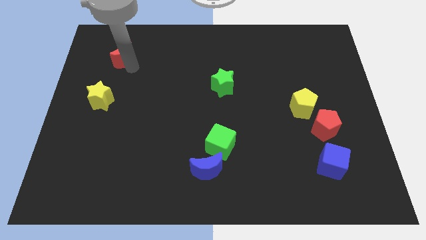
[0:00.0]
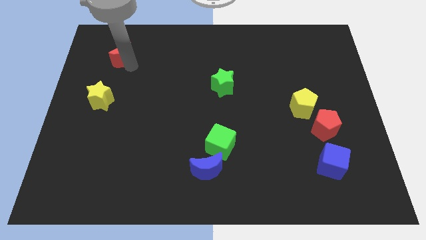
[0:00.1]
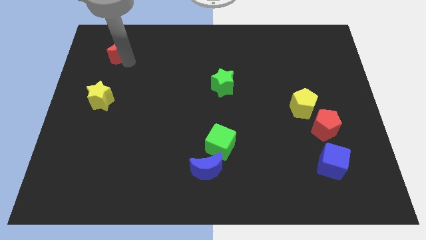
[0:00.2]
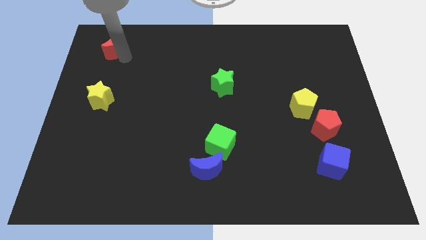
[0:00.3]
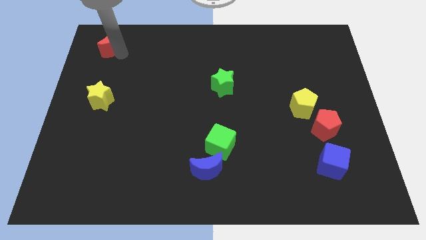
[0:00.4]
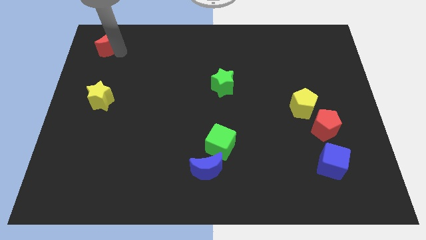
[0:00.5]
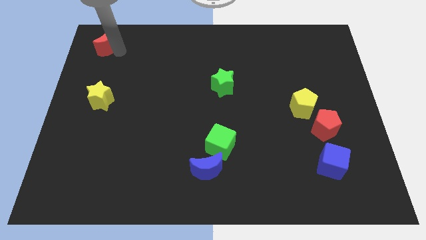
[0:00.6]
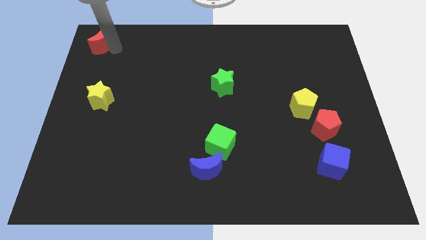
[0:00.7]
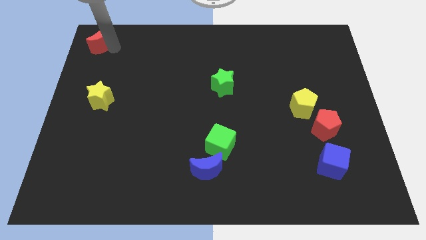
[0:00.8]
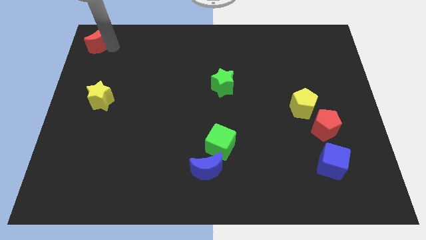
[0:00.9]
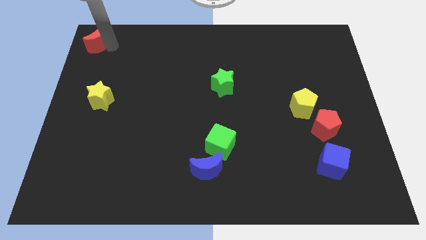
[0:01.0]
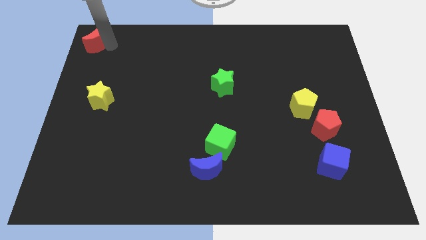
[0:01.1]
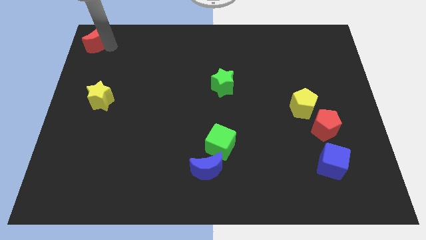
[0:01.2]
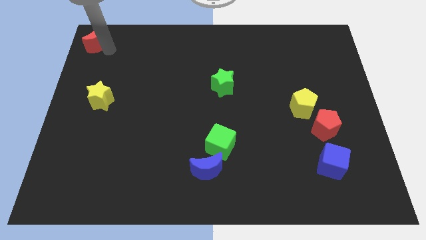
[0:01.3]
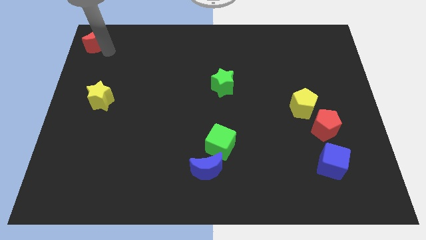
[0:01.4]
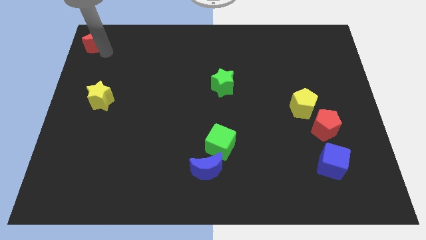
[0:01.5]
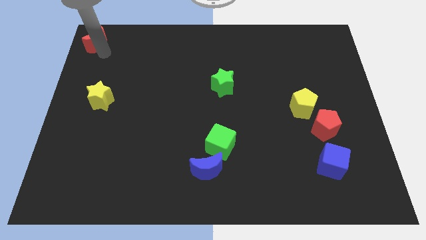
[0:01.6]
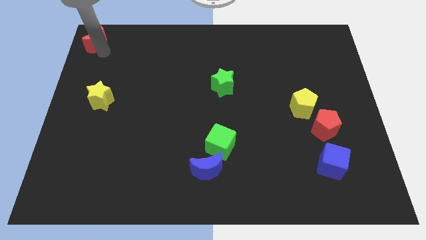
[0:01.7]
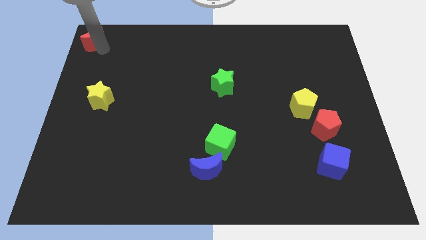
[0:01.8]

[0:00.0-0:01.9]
push the red crescent towards the top left corner of the board

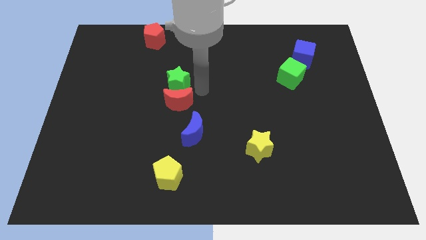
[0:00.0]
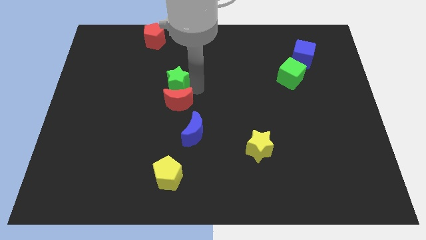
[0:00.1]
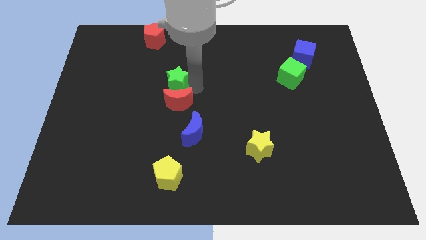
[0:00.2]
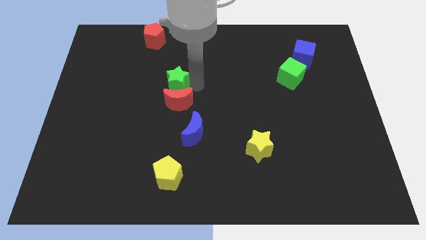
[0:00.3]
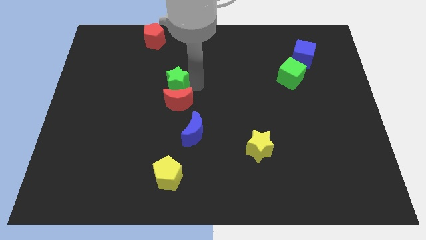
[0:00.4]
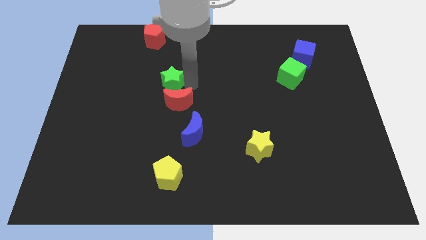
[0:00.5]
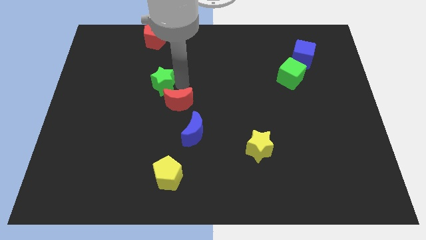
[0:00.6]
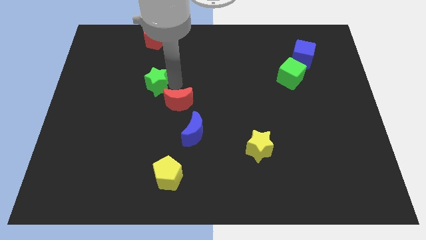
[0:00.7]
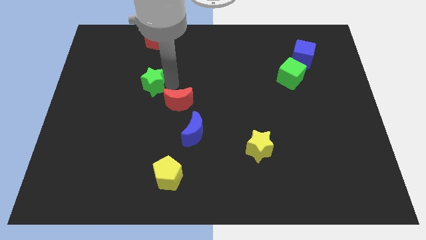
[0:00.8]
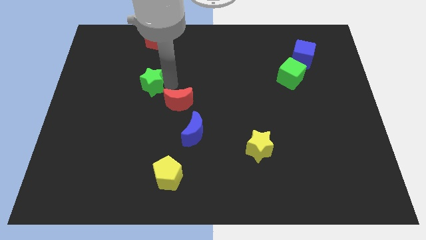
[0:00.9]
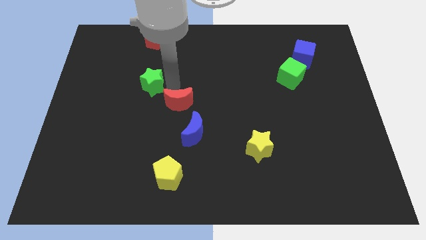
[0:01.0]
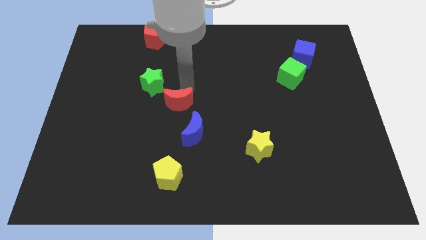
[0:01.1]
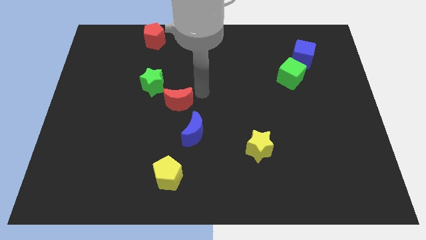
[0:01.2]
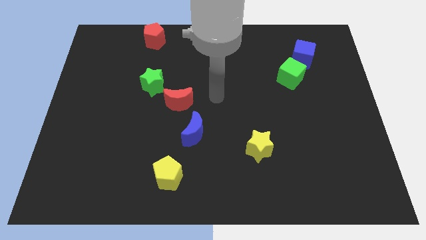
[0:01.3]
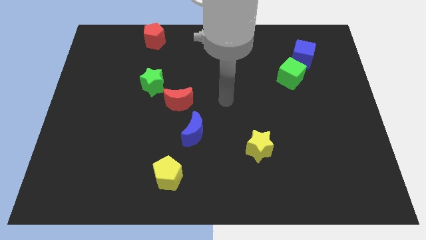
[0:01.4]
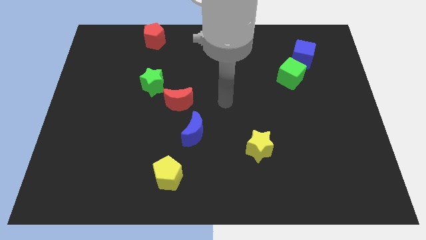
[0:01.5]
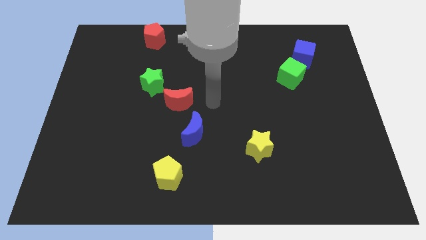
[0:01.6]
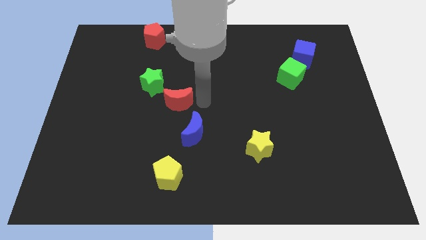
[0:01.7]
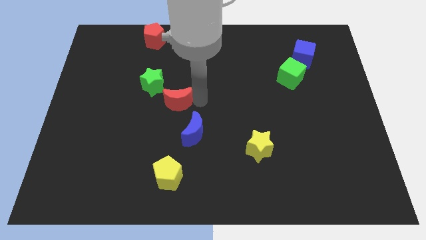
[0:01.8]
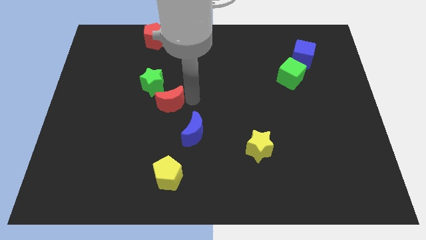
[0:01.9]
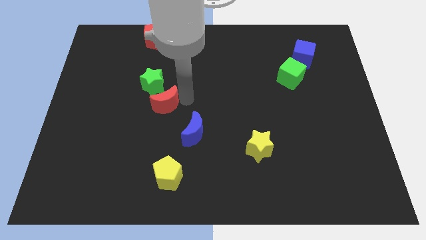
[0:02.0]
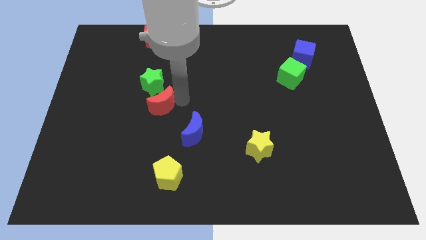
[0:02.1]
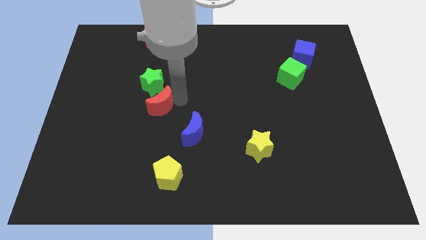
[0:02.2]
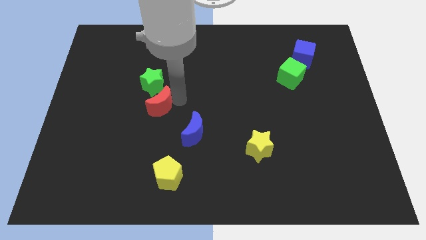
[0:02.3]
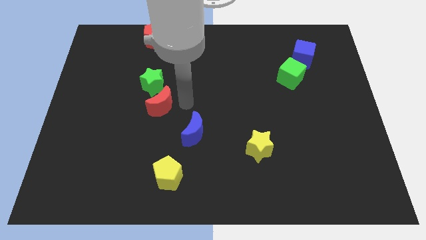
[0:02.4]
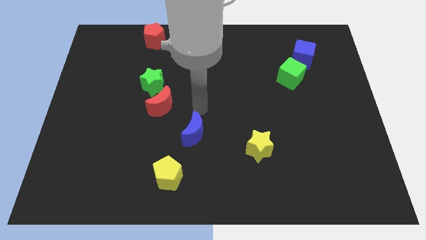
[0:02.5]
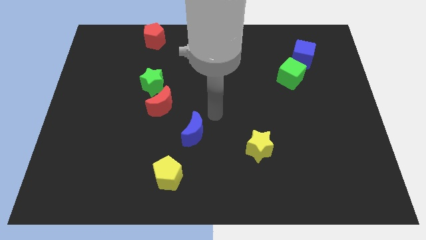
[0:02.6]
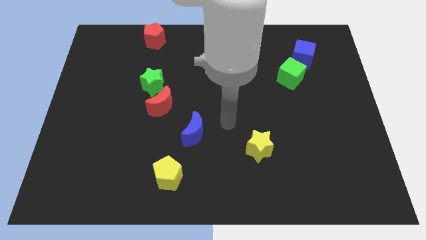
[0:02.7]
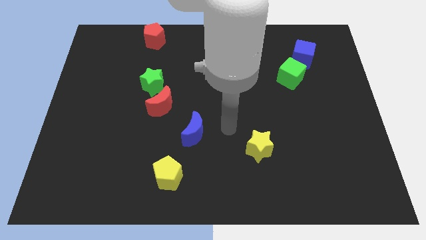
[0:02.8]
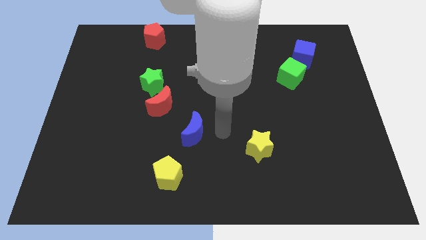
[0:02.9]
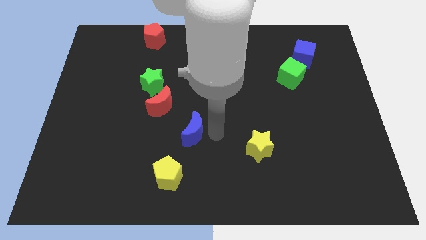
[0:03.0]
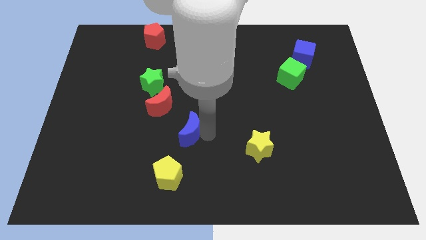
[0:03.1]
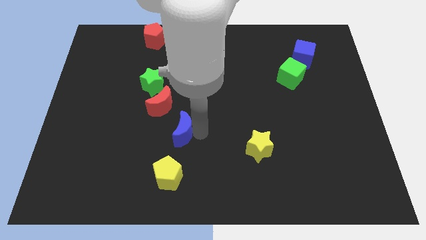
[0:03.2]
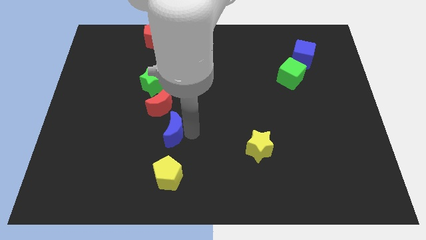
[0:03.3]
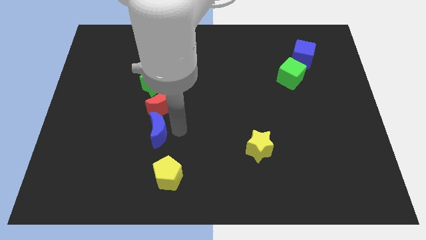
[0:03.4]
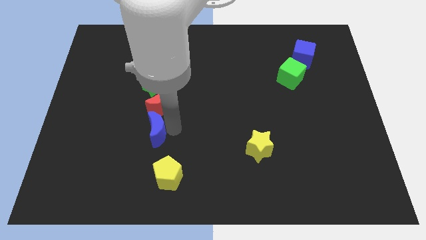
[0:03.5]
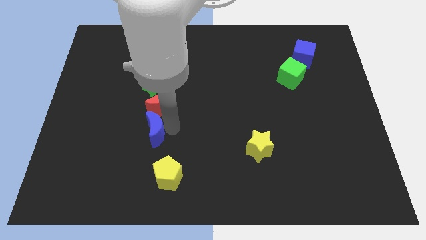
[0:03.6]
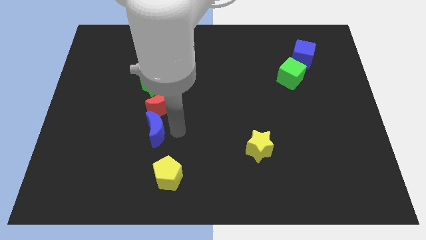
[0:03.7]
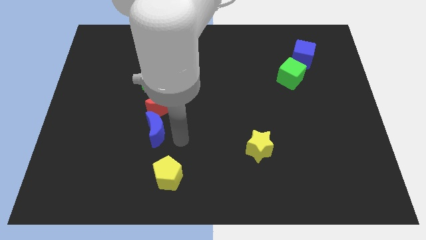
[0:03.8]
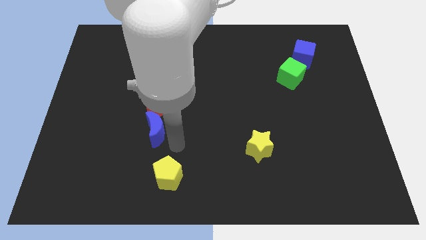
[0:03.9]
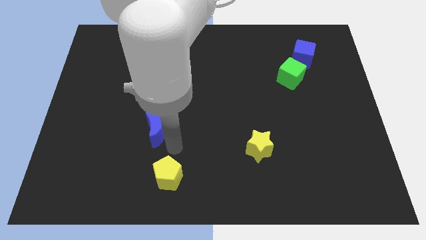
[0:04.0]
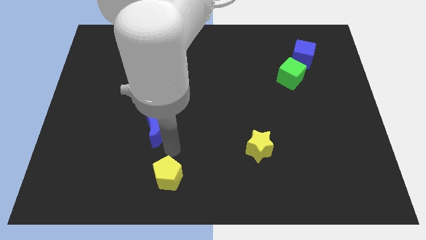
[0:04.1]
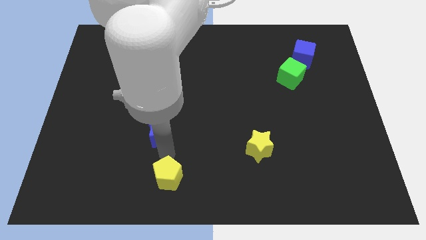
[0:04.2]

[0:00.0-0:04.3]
slide the green star red moon and blue moon in a vertical line

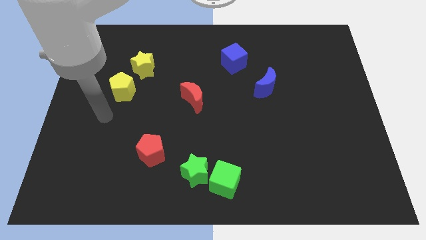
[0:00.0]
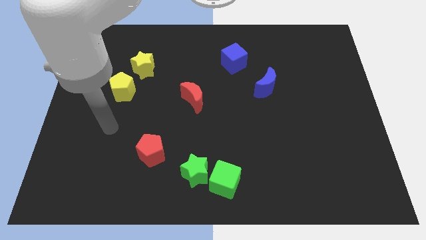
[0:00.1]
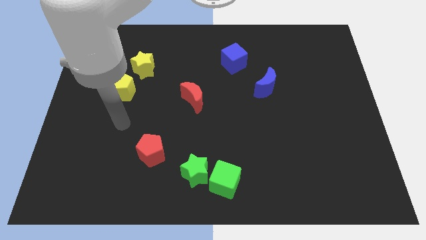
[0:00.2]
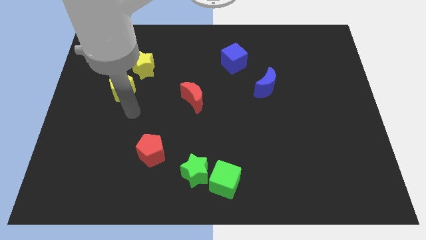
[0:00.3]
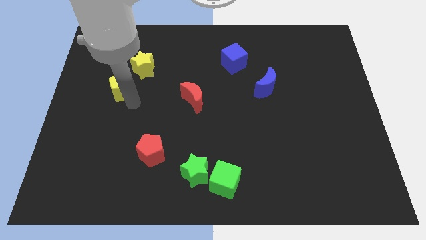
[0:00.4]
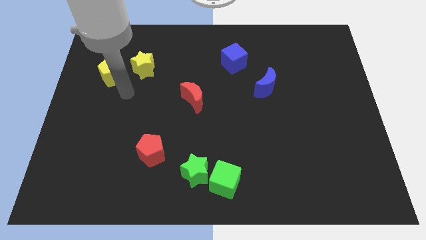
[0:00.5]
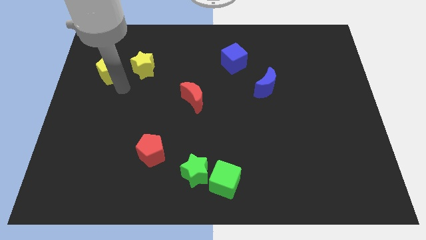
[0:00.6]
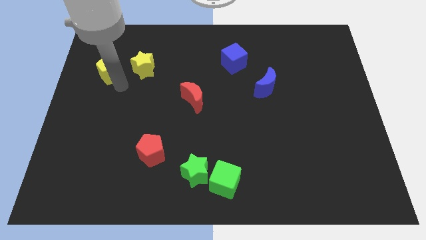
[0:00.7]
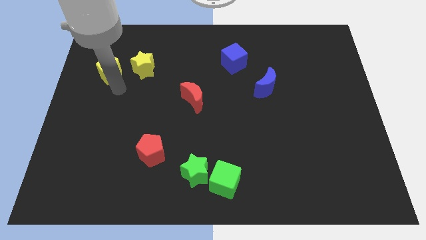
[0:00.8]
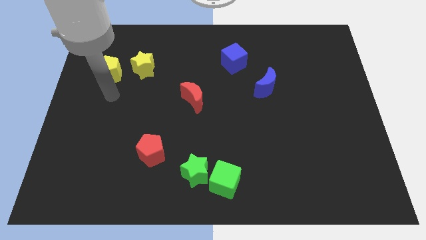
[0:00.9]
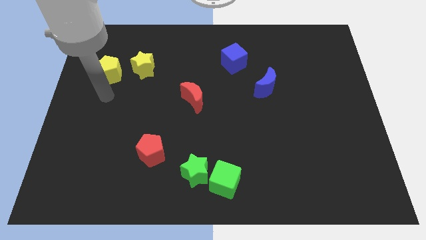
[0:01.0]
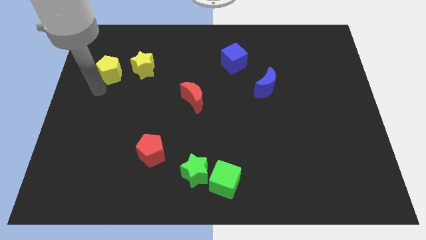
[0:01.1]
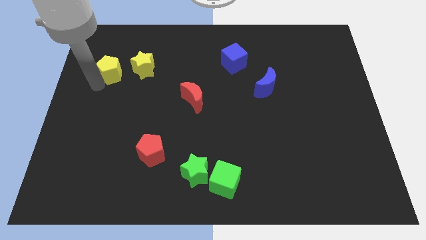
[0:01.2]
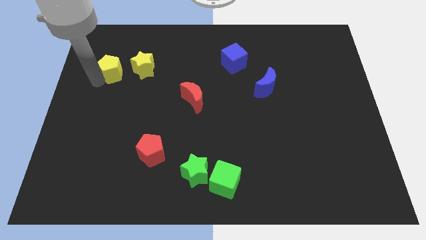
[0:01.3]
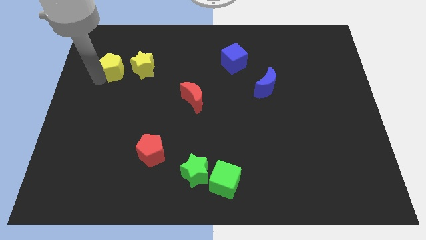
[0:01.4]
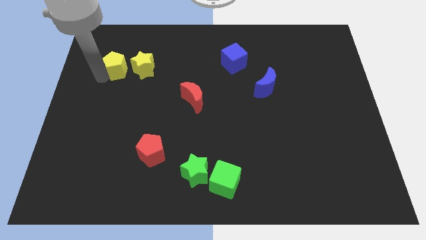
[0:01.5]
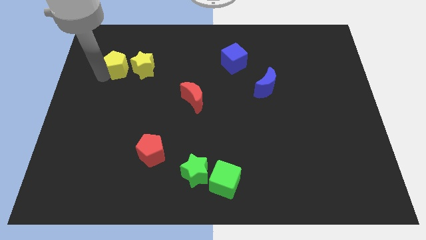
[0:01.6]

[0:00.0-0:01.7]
place the yellow pentagon to the left of the yellow star

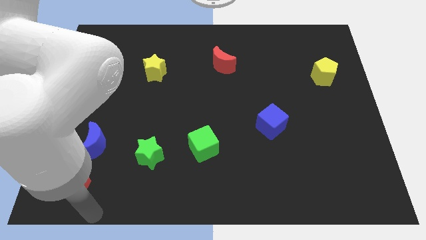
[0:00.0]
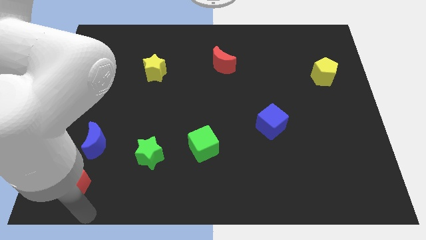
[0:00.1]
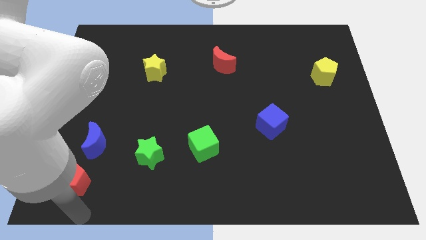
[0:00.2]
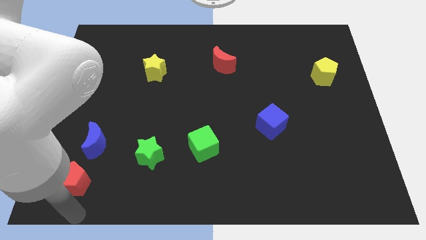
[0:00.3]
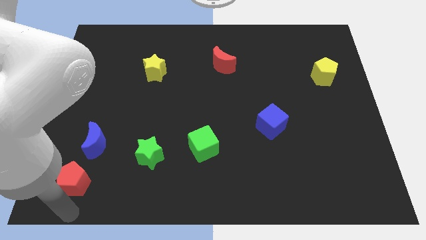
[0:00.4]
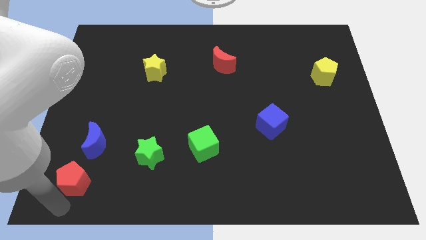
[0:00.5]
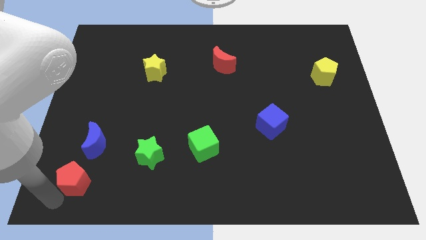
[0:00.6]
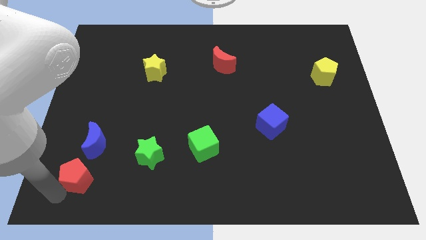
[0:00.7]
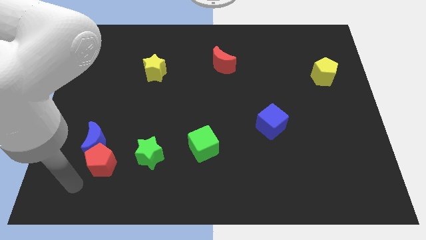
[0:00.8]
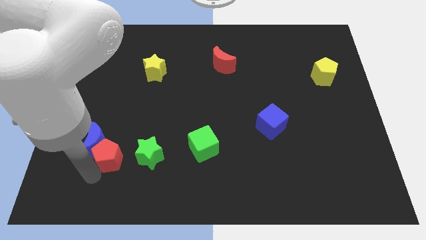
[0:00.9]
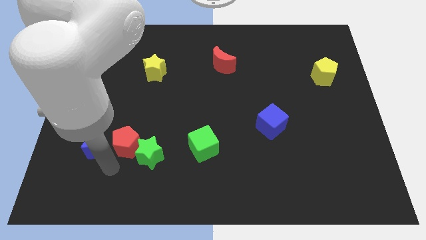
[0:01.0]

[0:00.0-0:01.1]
place the red pentagon right to the blue moon
